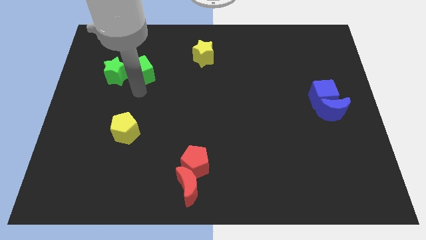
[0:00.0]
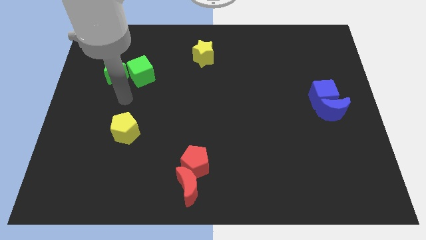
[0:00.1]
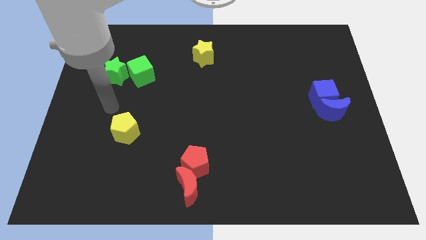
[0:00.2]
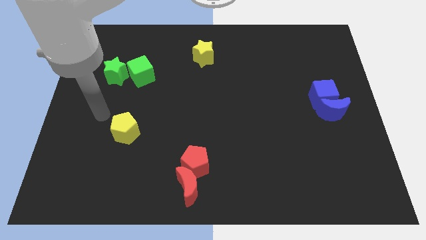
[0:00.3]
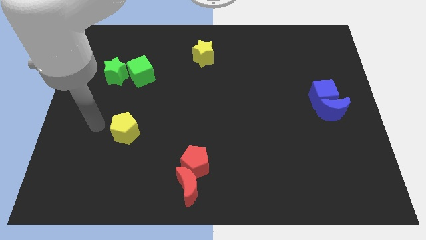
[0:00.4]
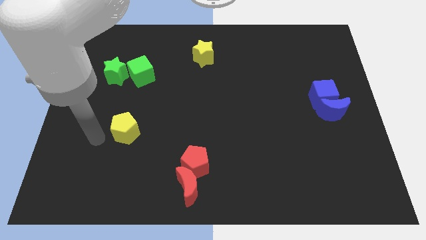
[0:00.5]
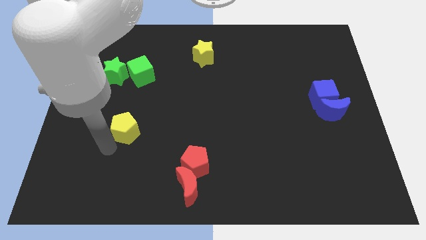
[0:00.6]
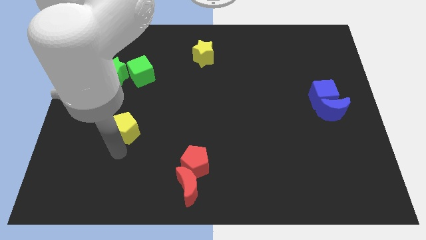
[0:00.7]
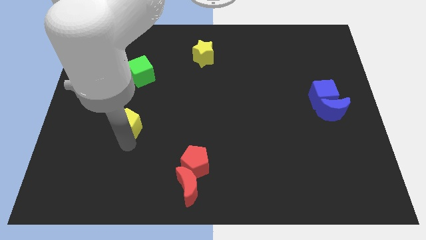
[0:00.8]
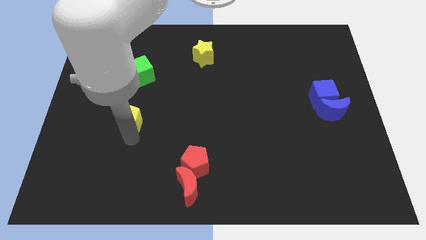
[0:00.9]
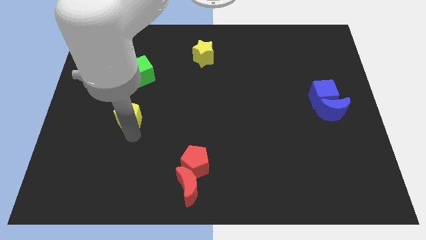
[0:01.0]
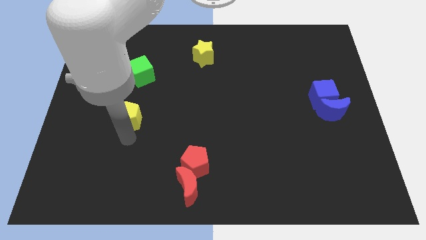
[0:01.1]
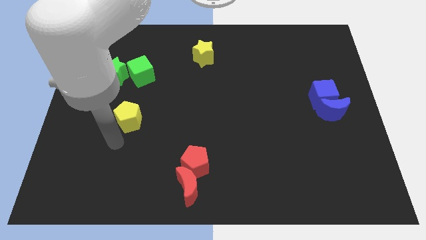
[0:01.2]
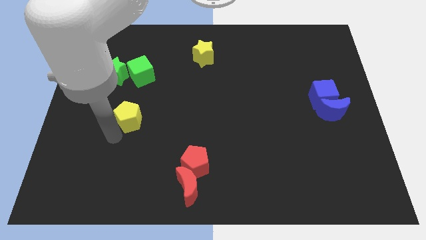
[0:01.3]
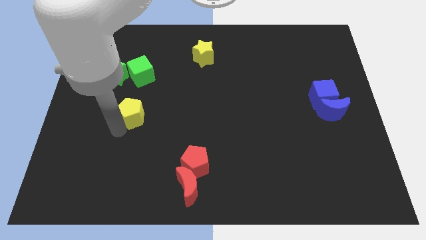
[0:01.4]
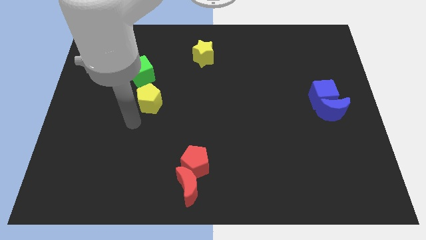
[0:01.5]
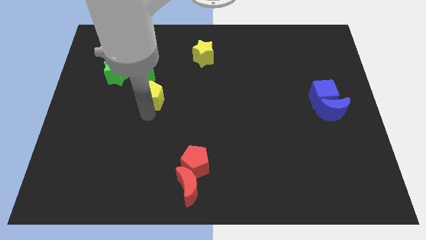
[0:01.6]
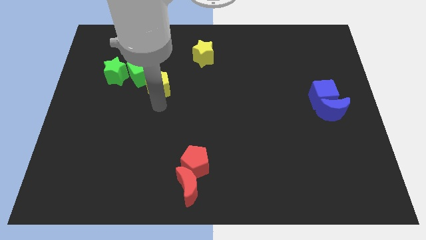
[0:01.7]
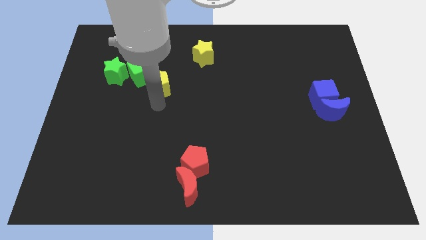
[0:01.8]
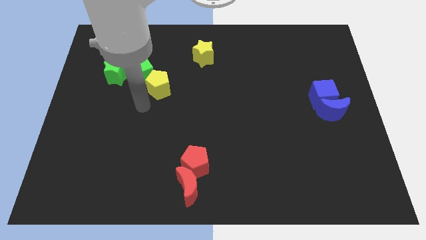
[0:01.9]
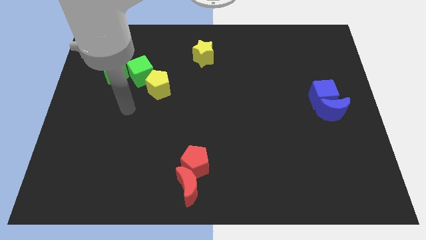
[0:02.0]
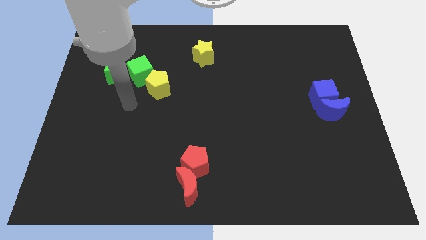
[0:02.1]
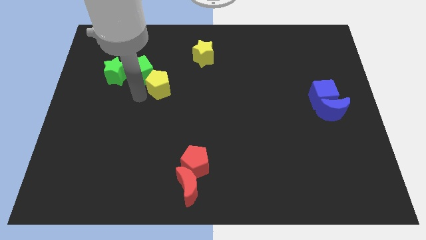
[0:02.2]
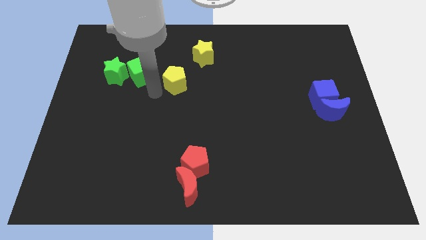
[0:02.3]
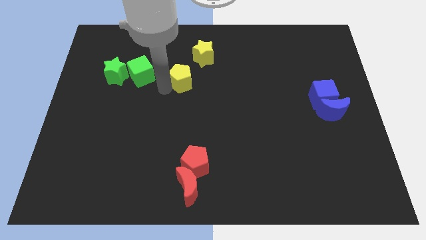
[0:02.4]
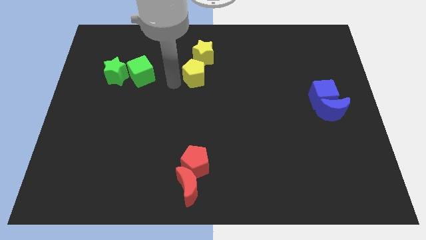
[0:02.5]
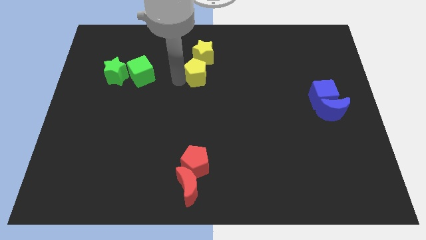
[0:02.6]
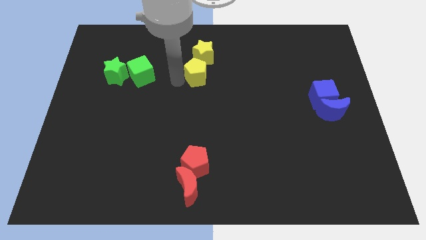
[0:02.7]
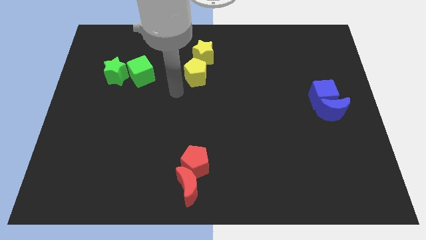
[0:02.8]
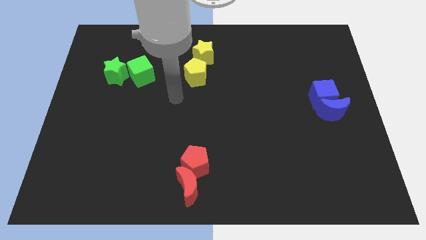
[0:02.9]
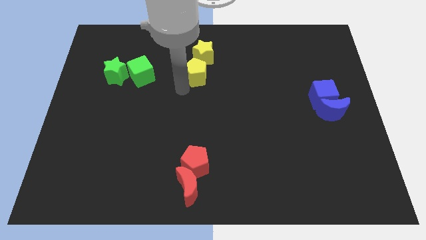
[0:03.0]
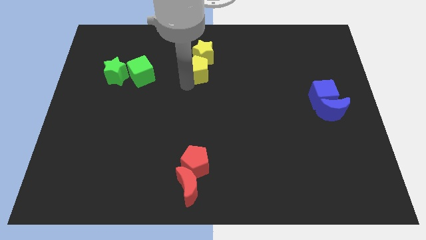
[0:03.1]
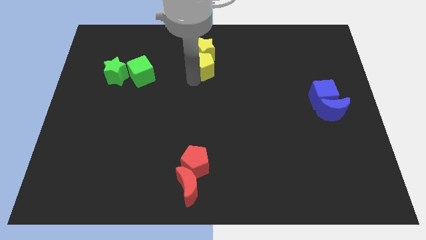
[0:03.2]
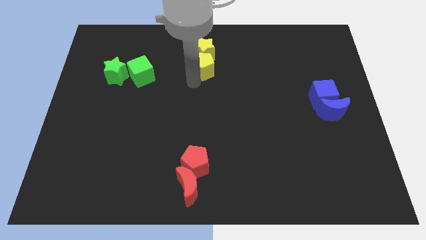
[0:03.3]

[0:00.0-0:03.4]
move the yellow pentagon into the bottom side of the yellow star

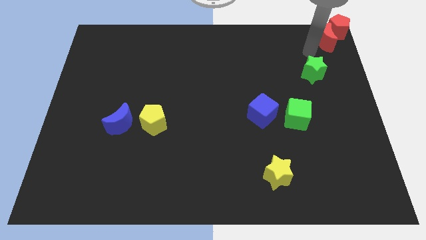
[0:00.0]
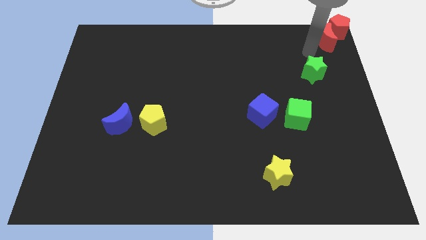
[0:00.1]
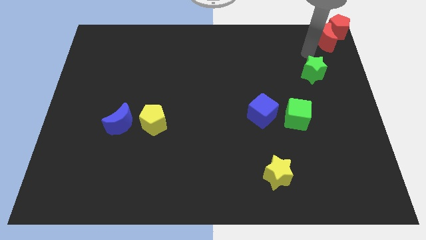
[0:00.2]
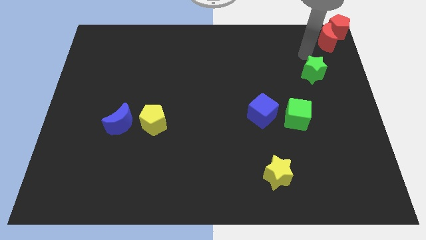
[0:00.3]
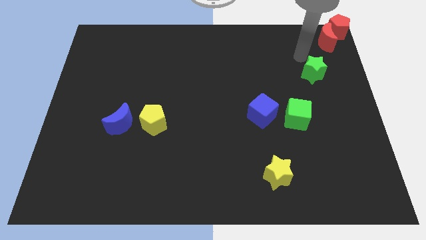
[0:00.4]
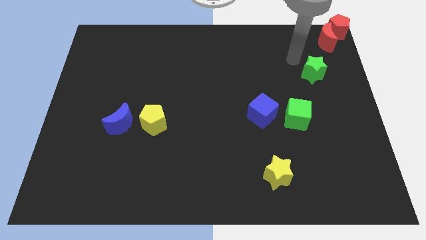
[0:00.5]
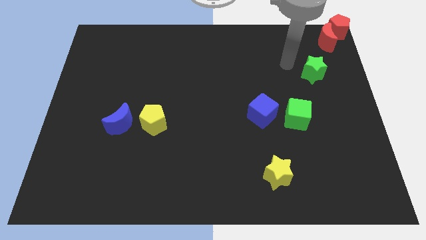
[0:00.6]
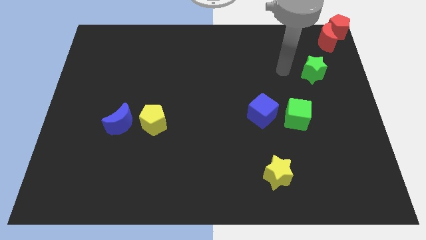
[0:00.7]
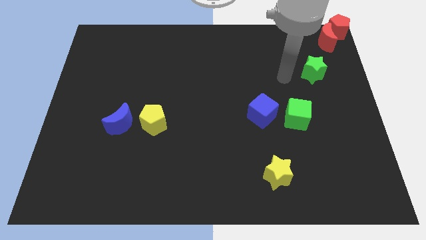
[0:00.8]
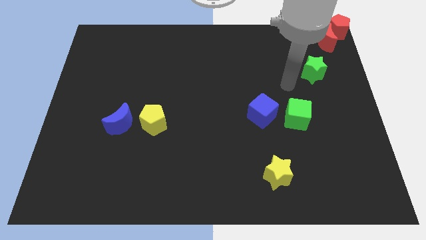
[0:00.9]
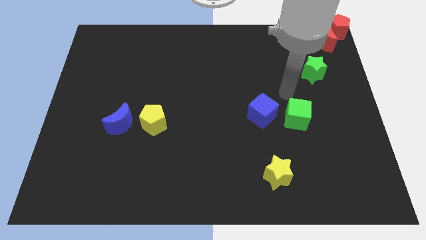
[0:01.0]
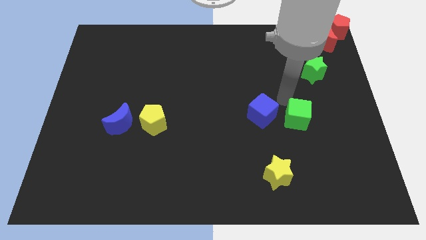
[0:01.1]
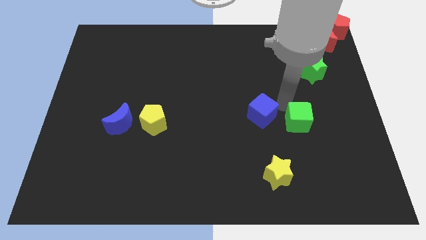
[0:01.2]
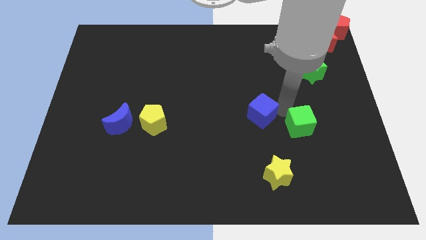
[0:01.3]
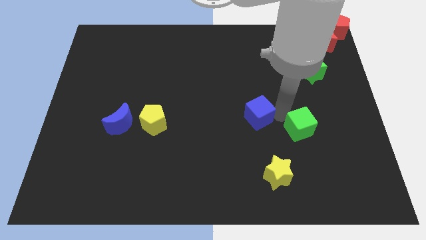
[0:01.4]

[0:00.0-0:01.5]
move your arm away from the red moon

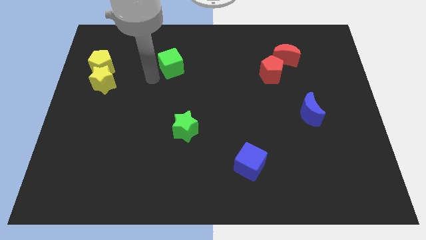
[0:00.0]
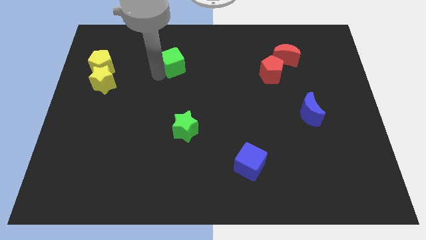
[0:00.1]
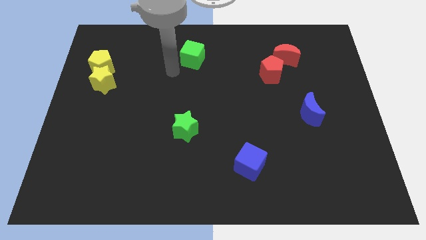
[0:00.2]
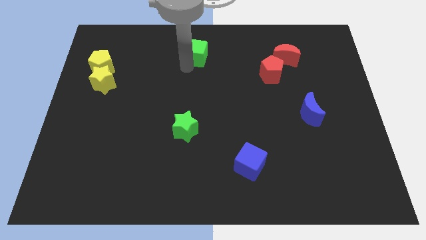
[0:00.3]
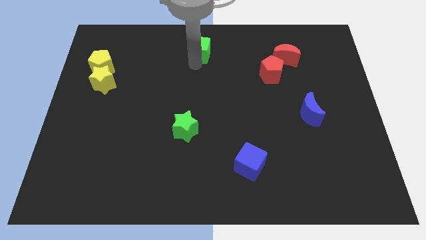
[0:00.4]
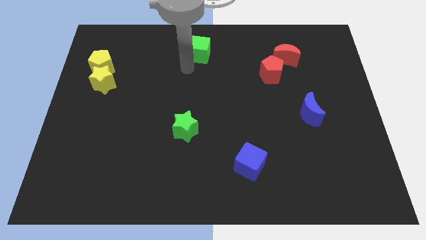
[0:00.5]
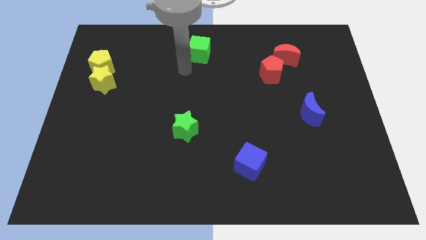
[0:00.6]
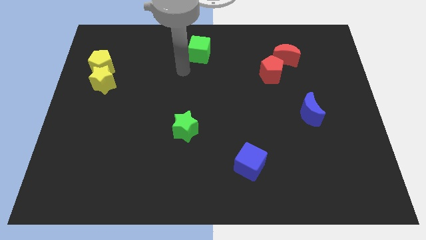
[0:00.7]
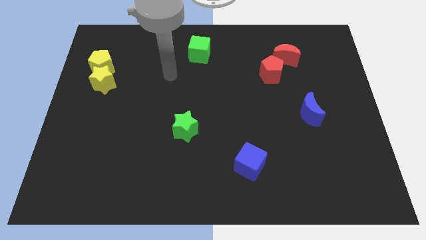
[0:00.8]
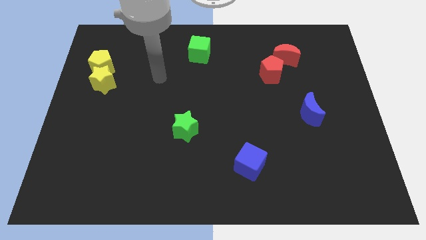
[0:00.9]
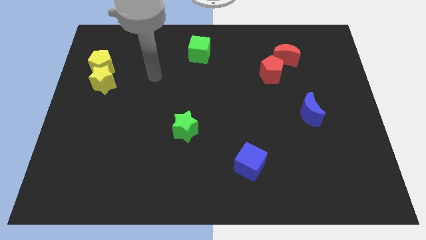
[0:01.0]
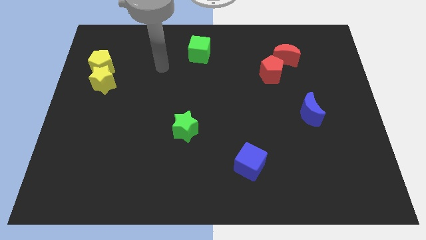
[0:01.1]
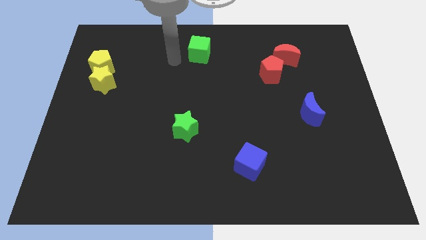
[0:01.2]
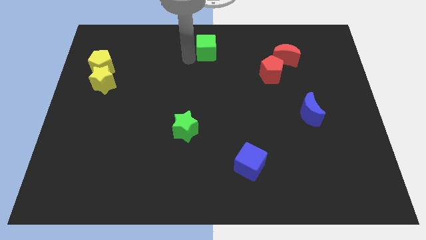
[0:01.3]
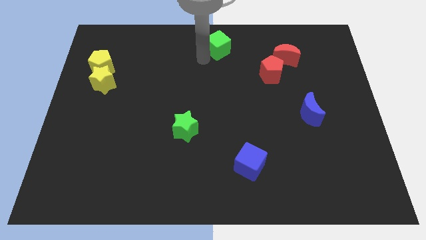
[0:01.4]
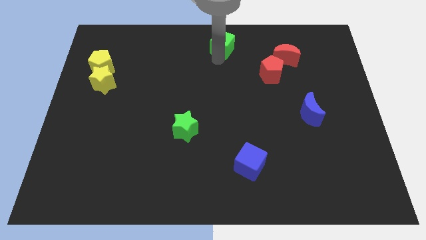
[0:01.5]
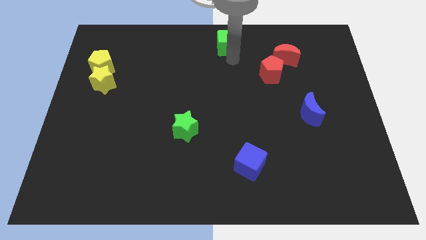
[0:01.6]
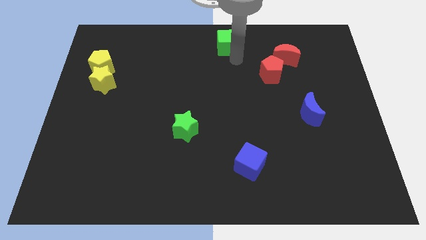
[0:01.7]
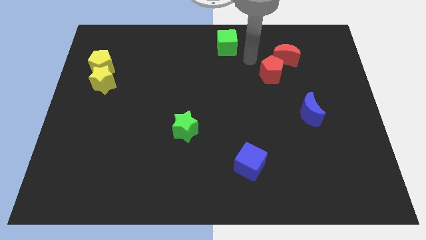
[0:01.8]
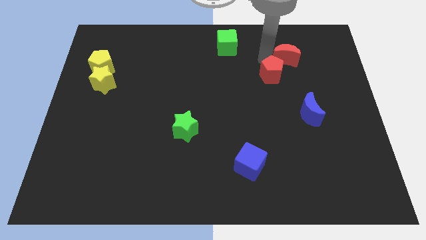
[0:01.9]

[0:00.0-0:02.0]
push the green cube to the top left of the red pentagon

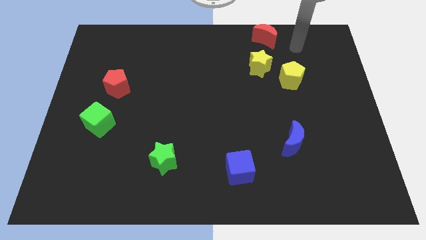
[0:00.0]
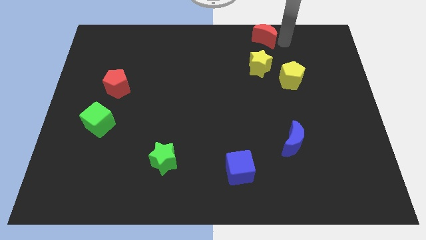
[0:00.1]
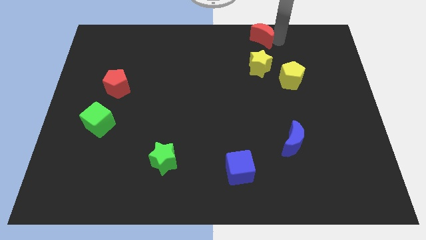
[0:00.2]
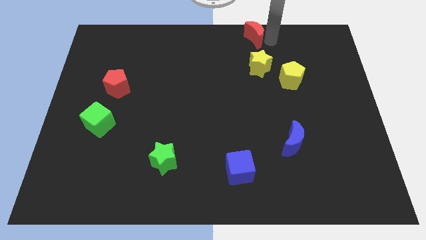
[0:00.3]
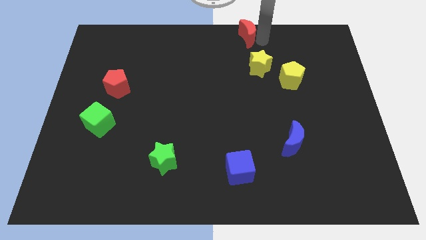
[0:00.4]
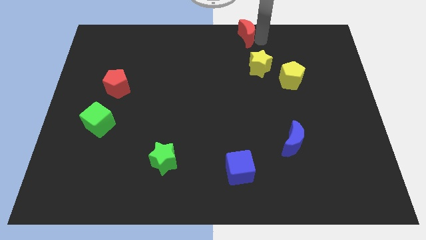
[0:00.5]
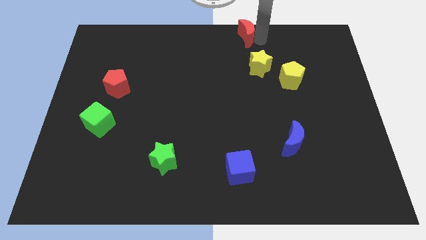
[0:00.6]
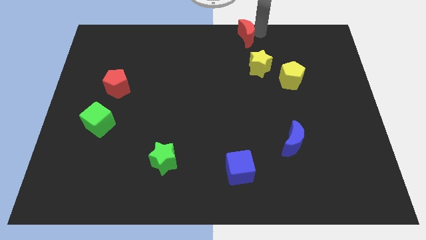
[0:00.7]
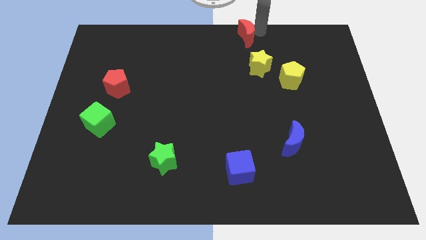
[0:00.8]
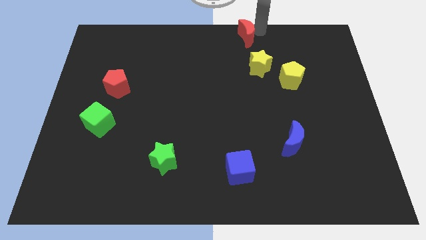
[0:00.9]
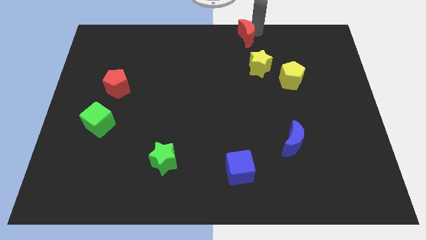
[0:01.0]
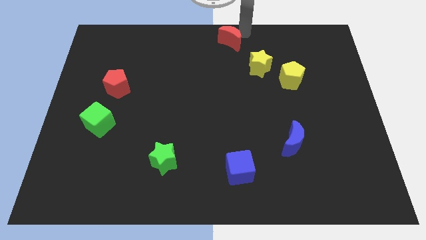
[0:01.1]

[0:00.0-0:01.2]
move the red moon diagonally top left to the yellow star

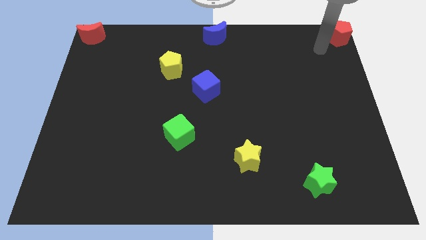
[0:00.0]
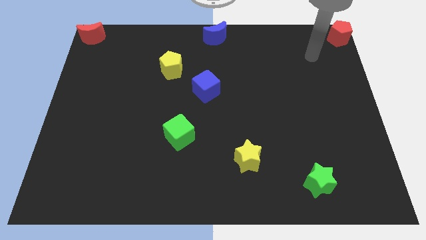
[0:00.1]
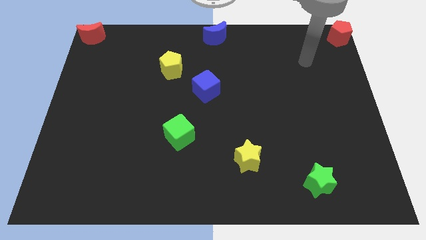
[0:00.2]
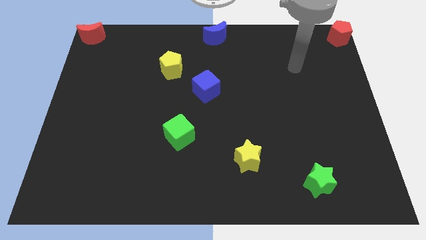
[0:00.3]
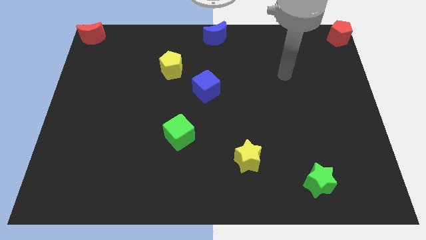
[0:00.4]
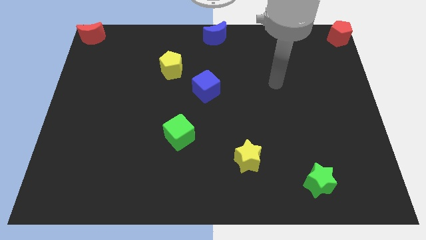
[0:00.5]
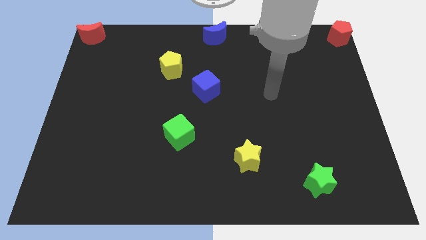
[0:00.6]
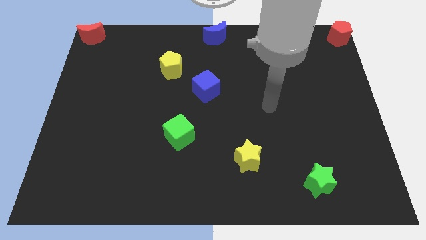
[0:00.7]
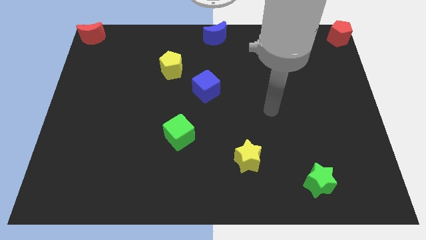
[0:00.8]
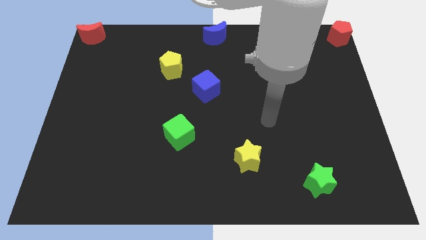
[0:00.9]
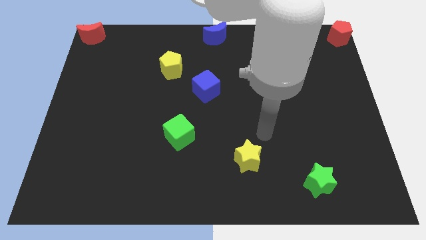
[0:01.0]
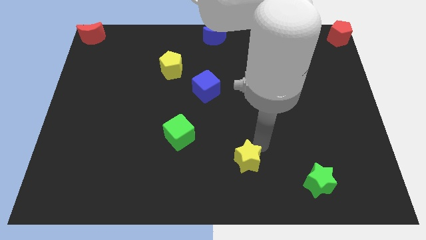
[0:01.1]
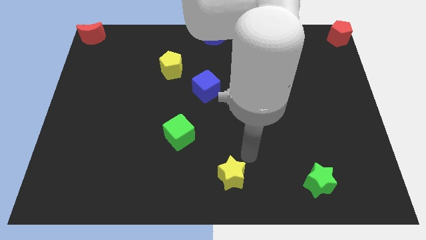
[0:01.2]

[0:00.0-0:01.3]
move the arm away from the red pentagon
